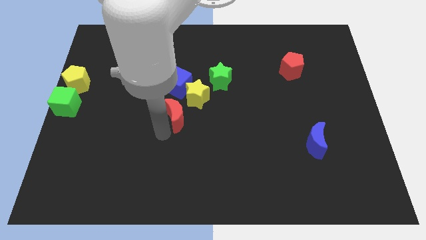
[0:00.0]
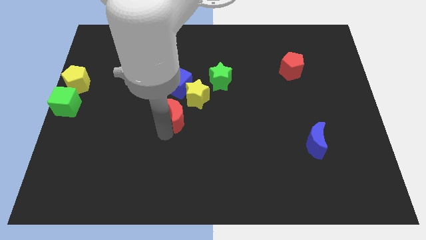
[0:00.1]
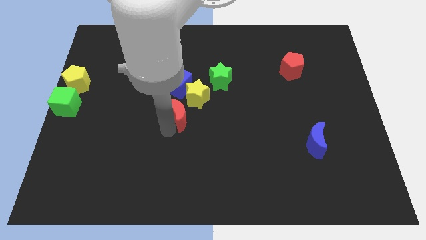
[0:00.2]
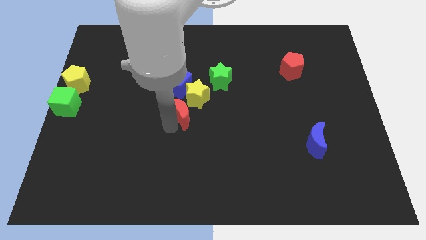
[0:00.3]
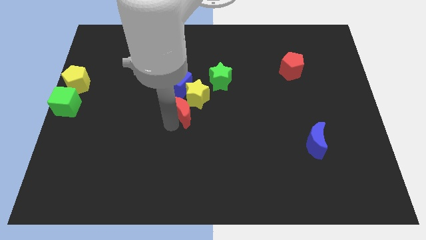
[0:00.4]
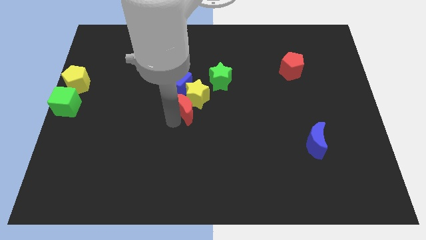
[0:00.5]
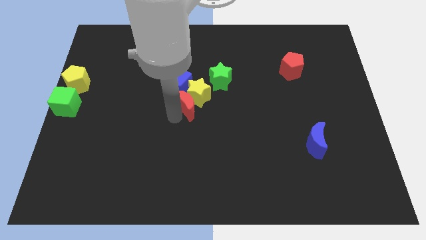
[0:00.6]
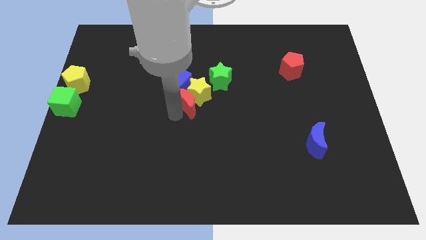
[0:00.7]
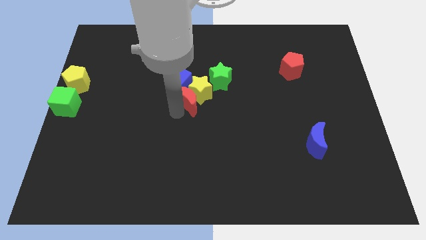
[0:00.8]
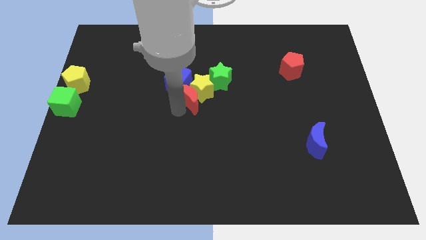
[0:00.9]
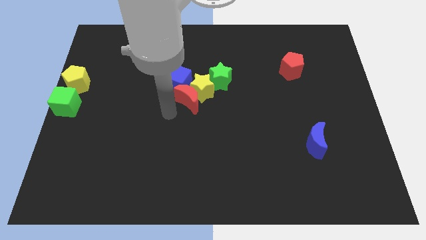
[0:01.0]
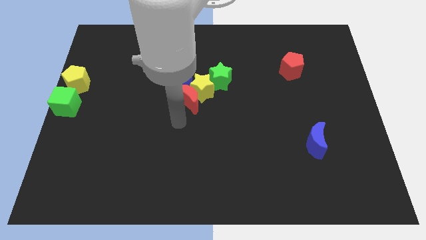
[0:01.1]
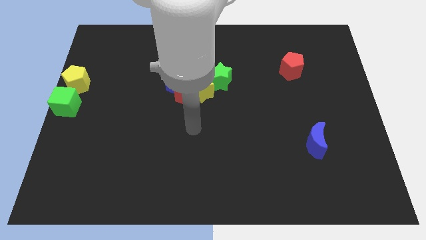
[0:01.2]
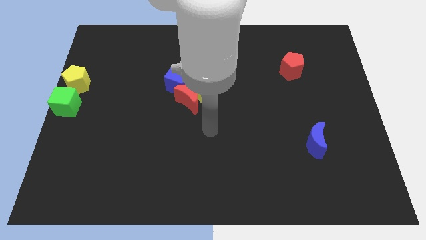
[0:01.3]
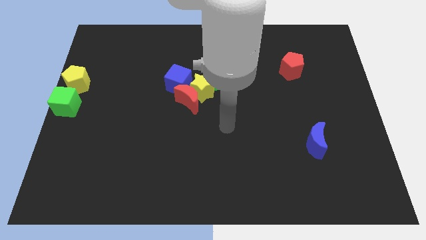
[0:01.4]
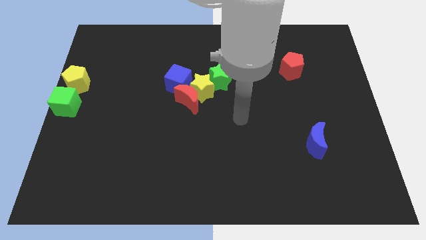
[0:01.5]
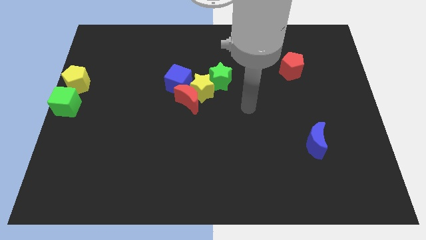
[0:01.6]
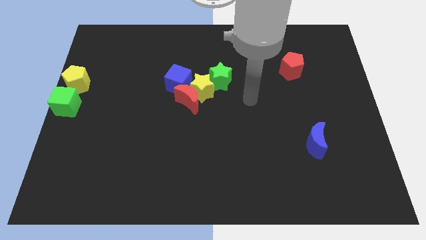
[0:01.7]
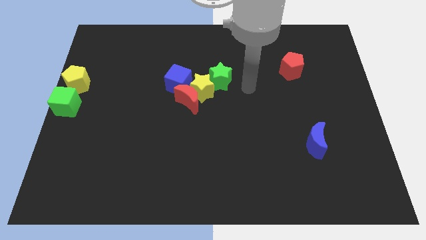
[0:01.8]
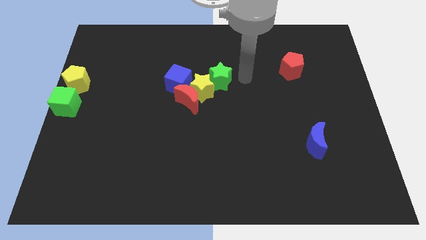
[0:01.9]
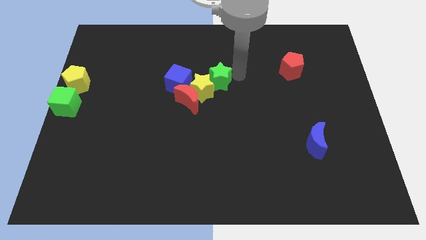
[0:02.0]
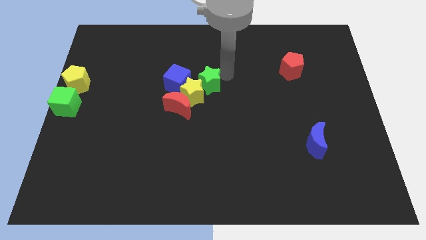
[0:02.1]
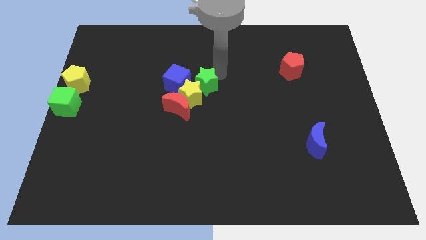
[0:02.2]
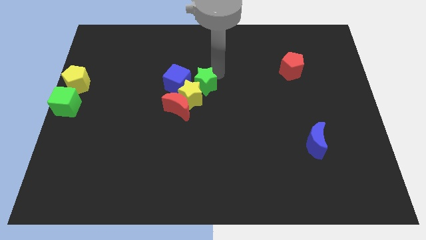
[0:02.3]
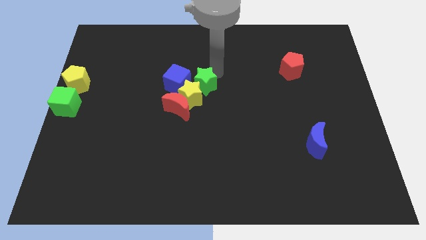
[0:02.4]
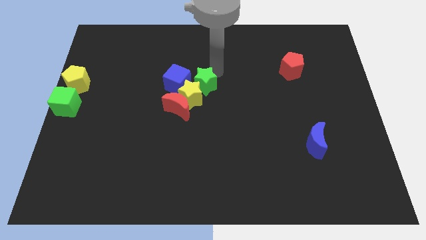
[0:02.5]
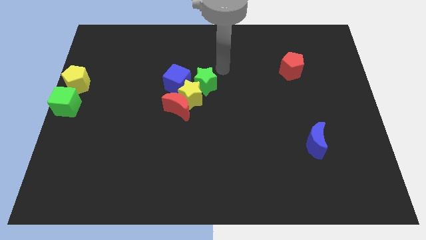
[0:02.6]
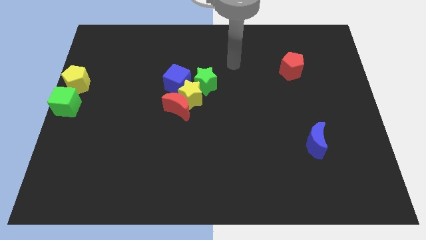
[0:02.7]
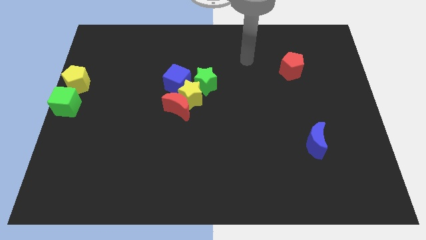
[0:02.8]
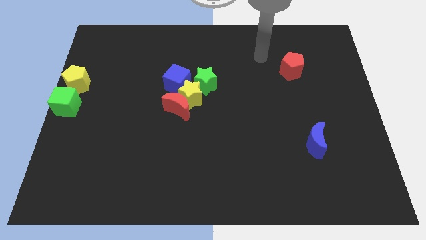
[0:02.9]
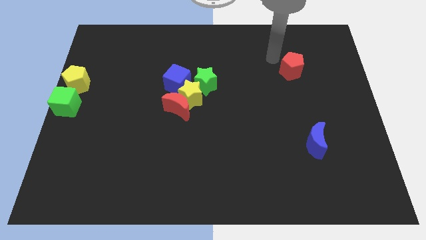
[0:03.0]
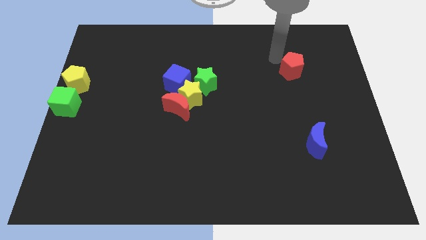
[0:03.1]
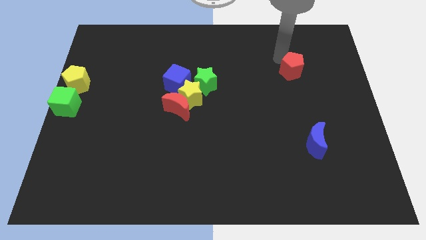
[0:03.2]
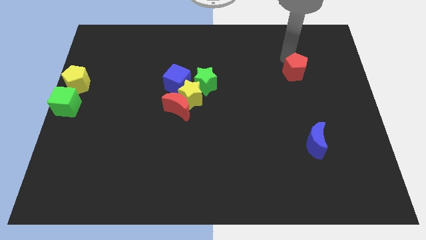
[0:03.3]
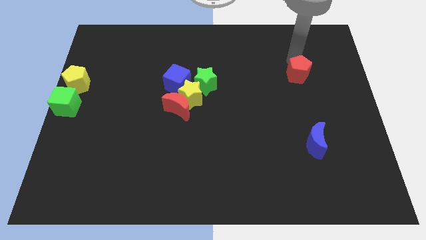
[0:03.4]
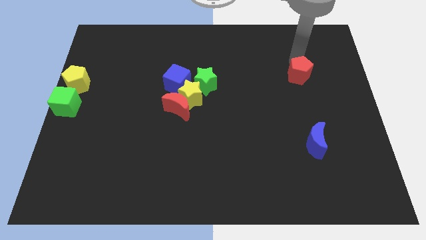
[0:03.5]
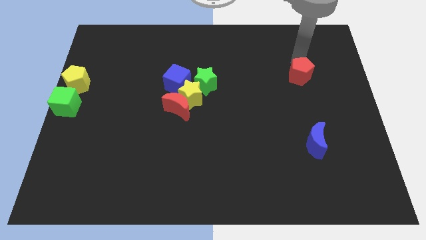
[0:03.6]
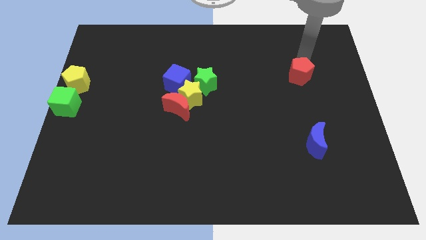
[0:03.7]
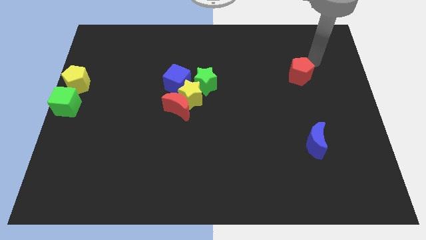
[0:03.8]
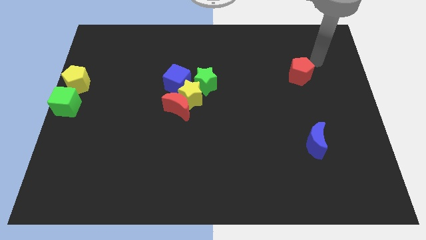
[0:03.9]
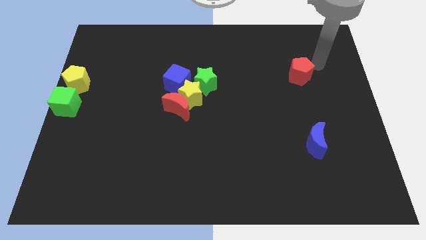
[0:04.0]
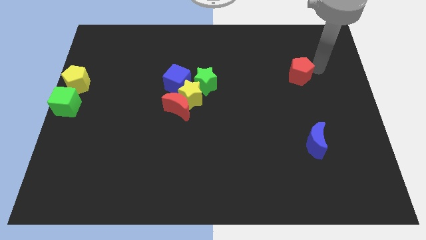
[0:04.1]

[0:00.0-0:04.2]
slightly move the red pentagon

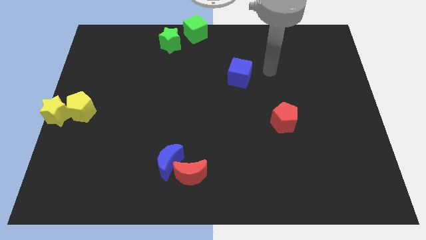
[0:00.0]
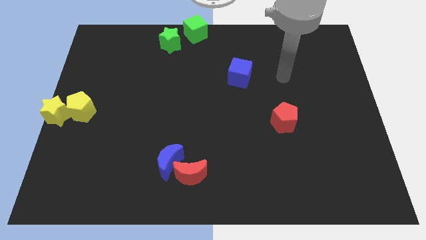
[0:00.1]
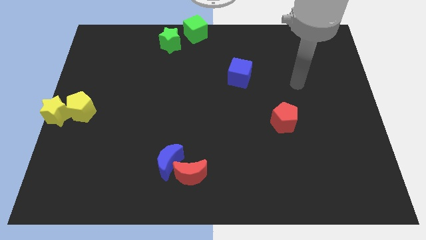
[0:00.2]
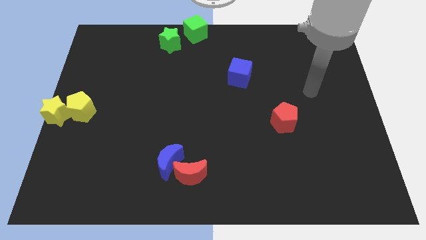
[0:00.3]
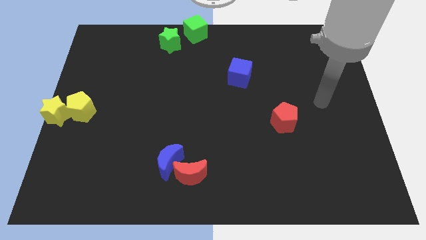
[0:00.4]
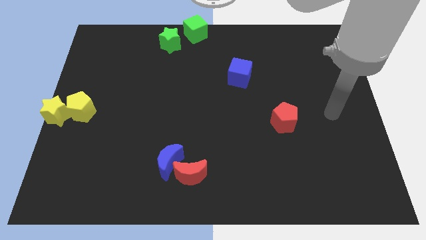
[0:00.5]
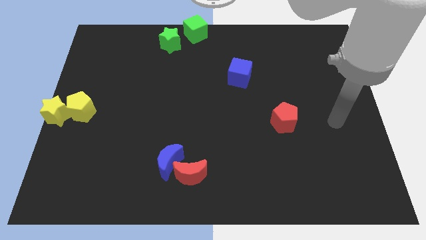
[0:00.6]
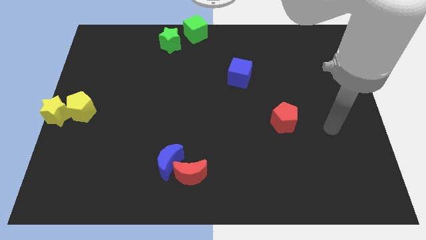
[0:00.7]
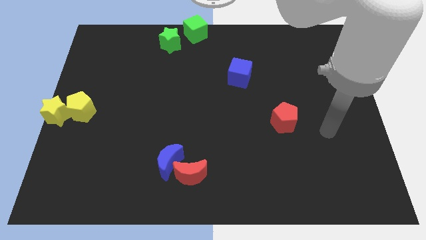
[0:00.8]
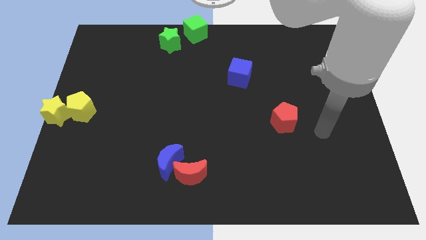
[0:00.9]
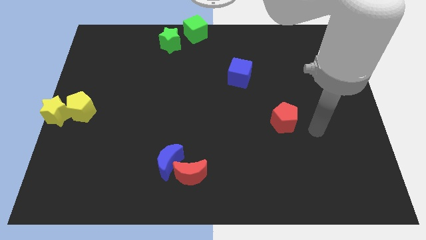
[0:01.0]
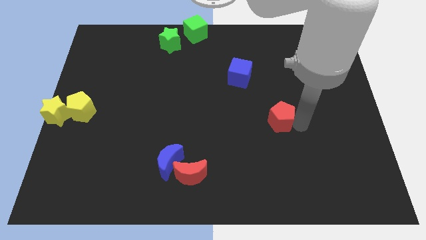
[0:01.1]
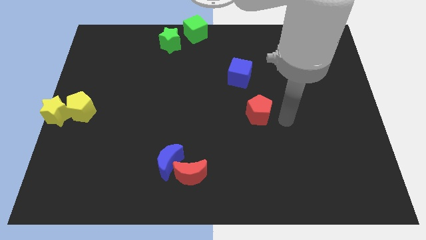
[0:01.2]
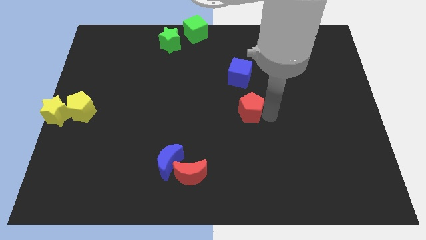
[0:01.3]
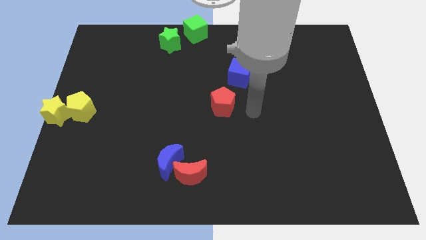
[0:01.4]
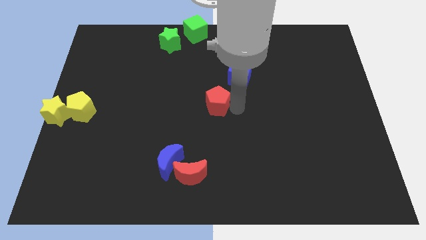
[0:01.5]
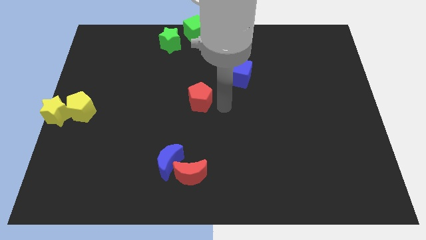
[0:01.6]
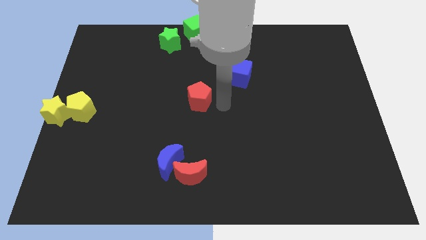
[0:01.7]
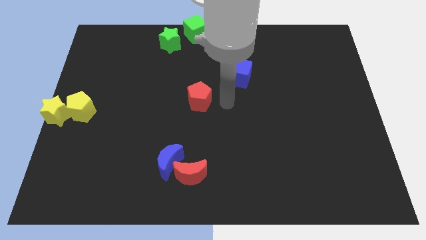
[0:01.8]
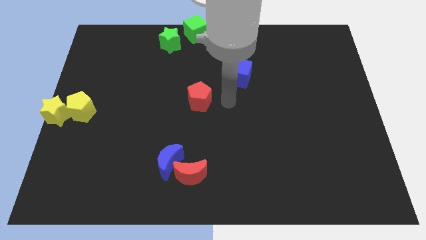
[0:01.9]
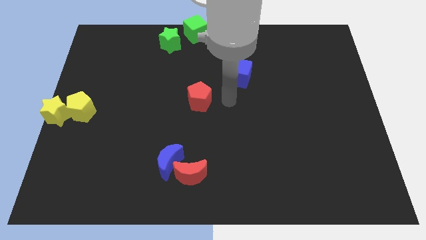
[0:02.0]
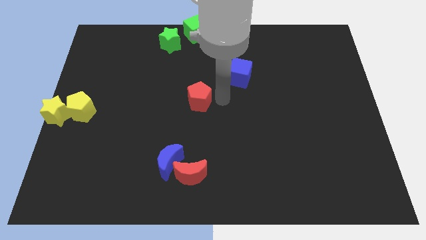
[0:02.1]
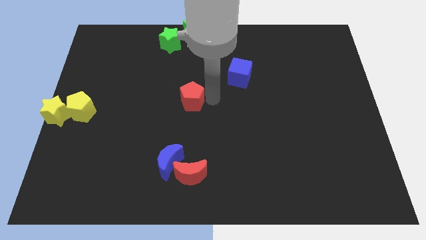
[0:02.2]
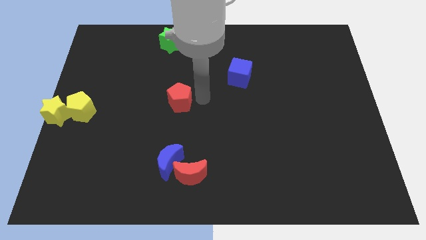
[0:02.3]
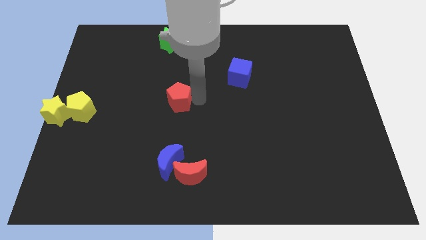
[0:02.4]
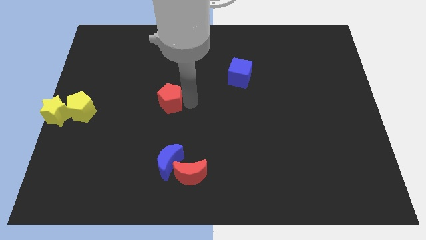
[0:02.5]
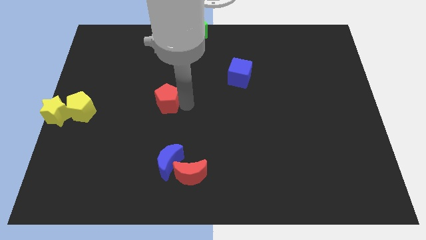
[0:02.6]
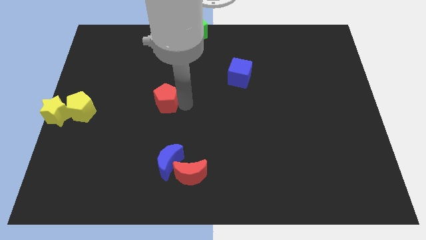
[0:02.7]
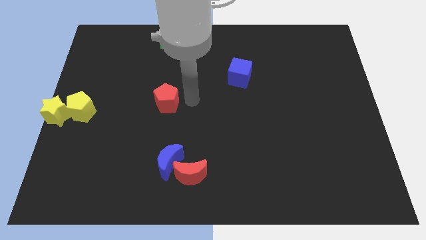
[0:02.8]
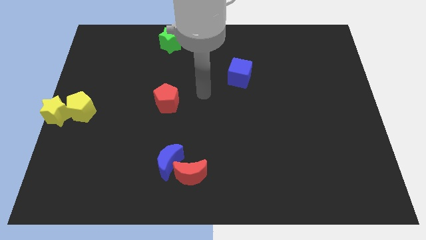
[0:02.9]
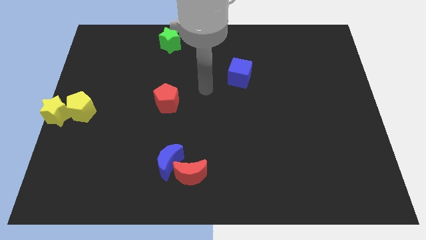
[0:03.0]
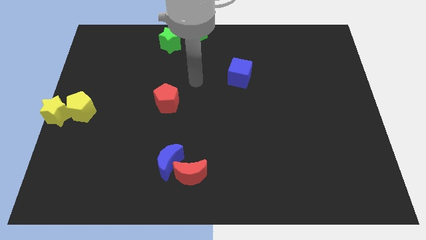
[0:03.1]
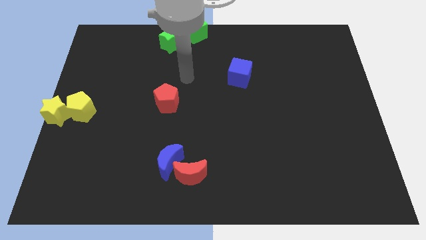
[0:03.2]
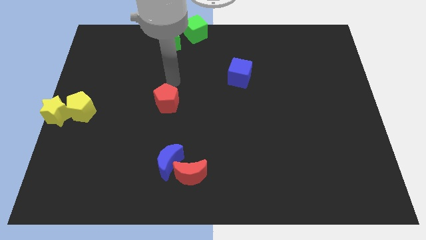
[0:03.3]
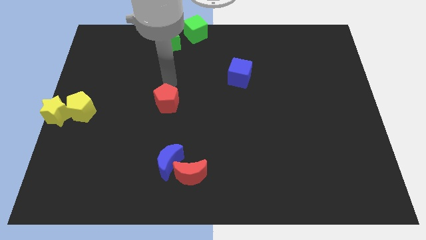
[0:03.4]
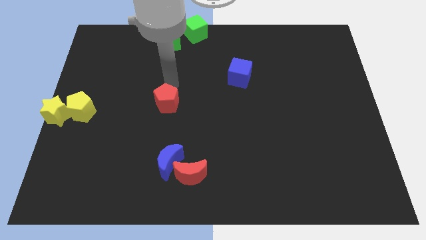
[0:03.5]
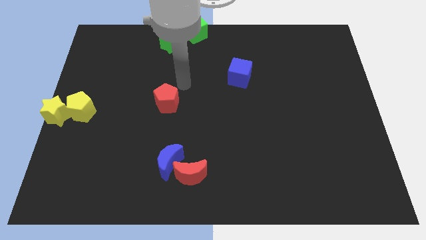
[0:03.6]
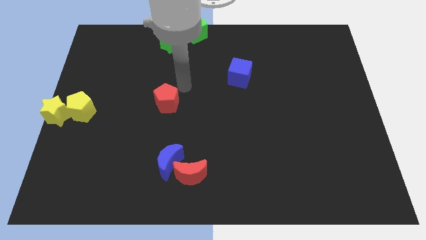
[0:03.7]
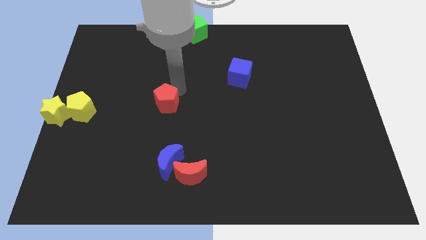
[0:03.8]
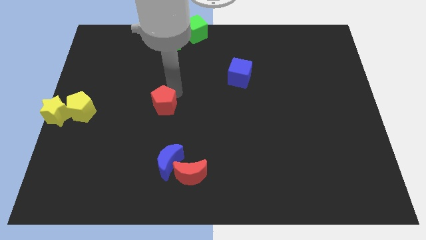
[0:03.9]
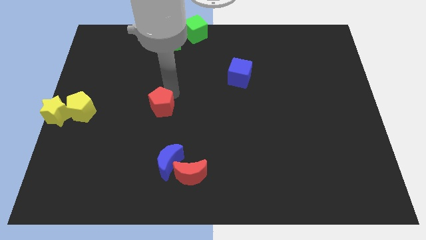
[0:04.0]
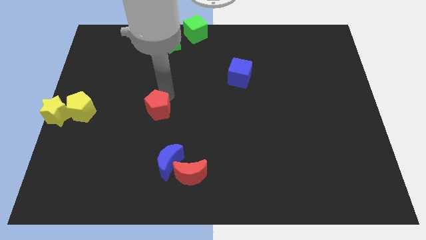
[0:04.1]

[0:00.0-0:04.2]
place the red pentagon at the center of the board

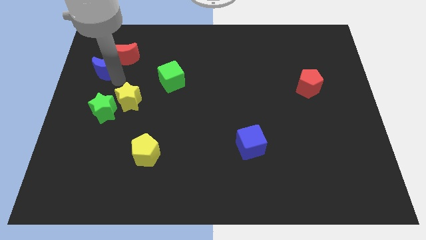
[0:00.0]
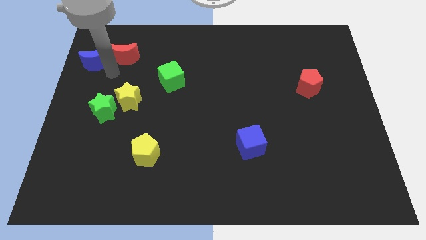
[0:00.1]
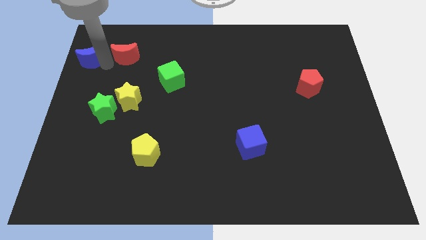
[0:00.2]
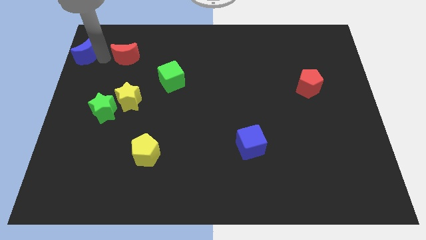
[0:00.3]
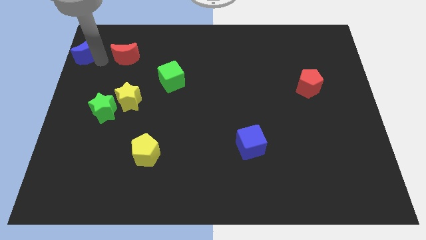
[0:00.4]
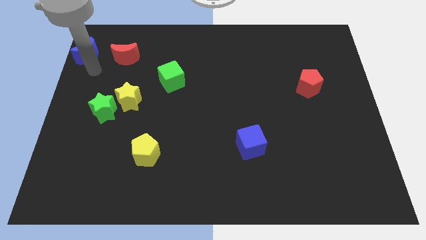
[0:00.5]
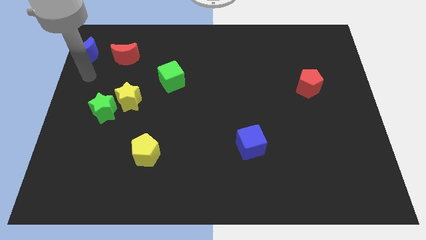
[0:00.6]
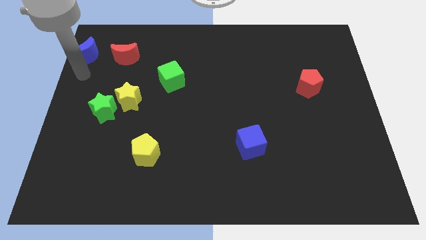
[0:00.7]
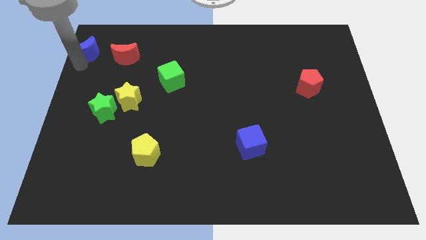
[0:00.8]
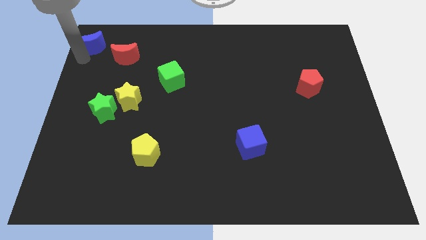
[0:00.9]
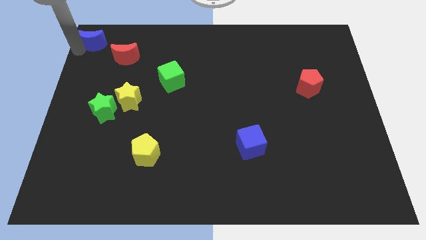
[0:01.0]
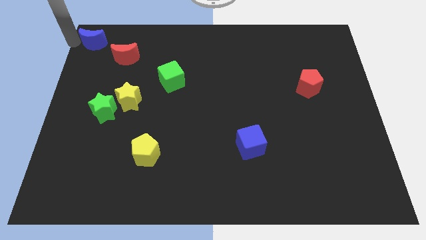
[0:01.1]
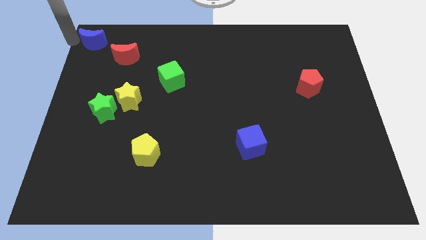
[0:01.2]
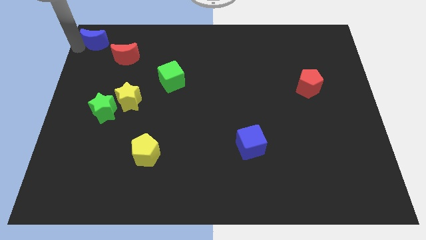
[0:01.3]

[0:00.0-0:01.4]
push the blue moon to the top left side
